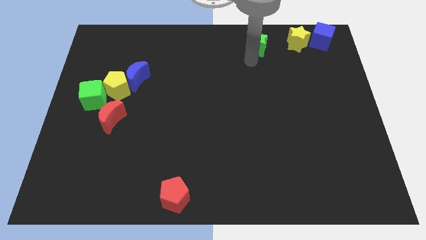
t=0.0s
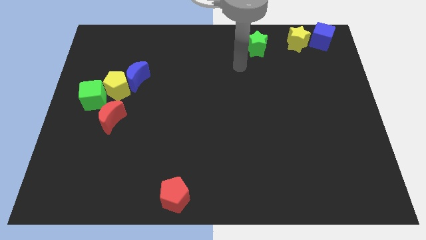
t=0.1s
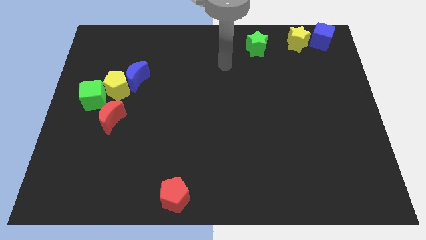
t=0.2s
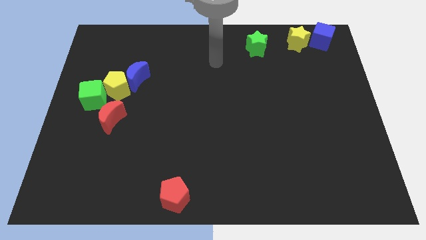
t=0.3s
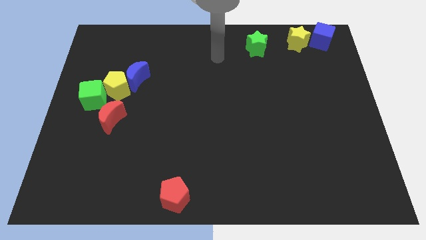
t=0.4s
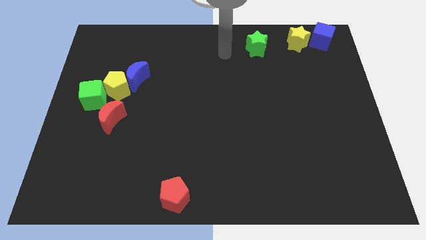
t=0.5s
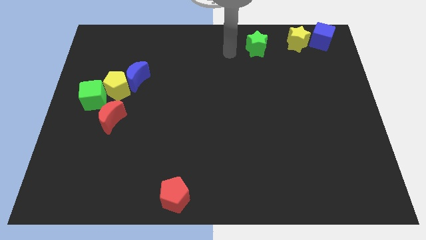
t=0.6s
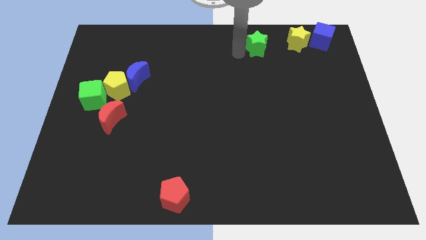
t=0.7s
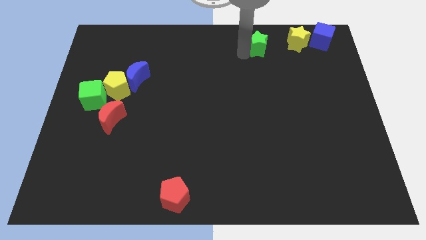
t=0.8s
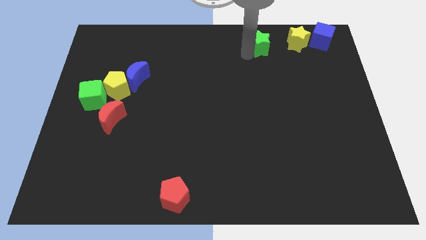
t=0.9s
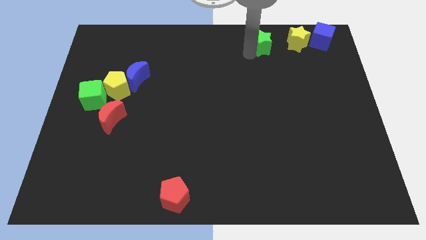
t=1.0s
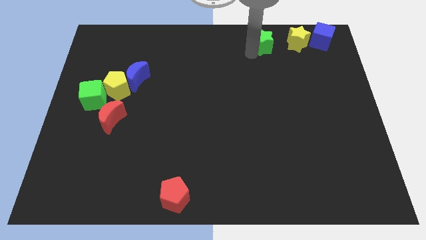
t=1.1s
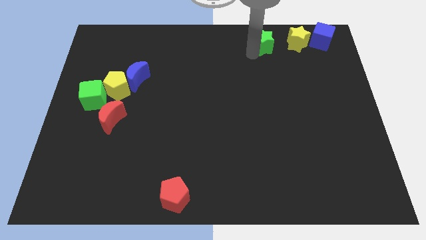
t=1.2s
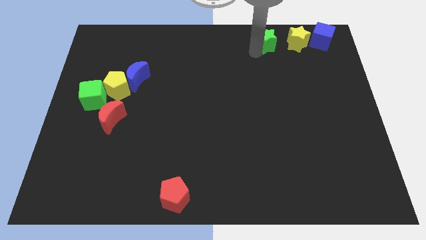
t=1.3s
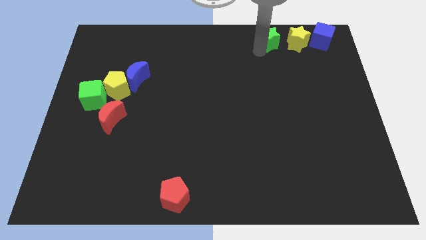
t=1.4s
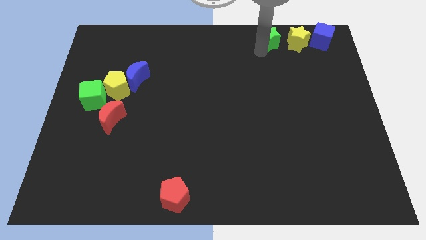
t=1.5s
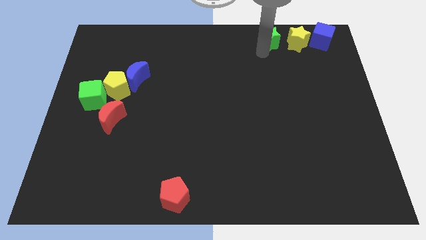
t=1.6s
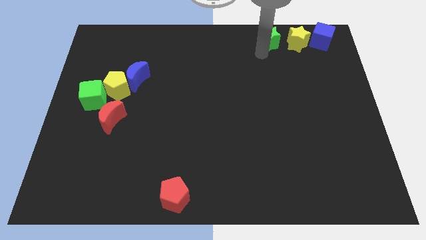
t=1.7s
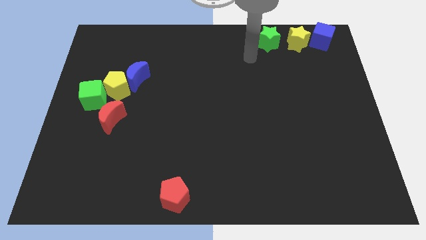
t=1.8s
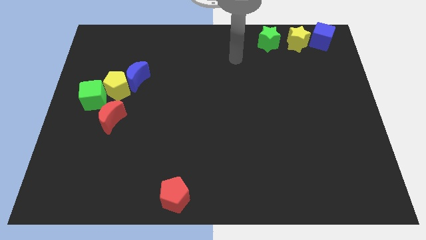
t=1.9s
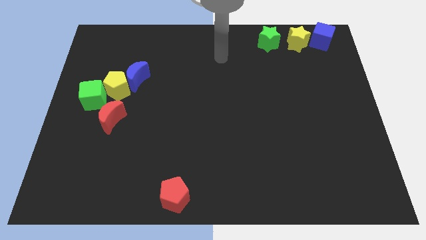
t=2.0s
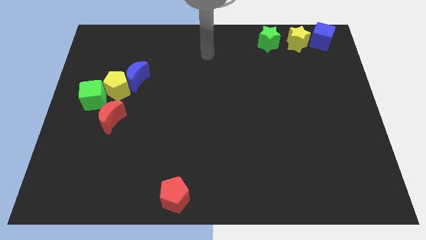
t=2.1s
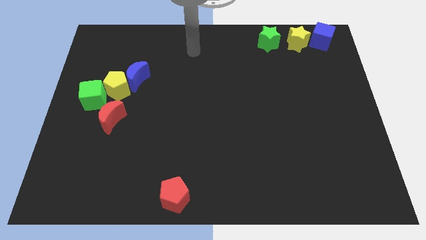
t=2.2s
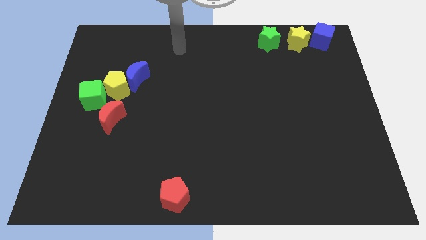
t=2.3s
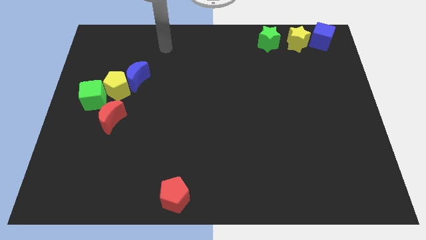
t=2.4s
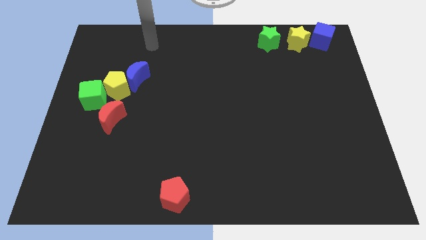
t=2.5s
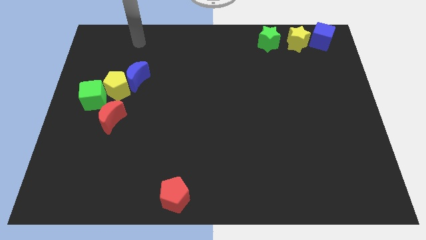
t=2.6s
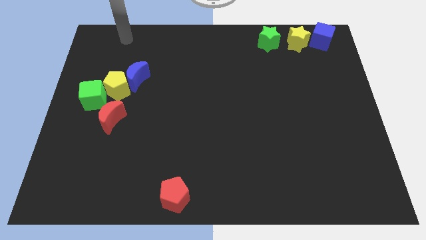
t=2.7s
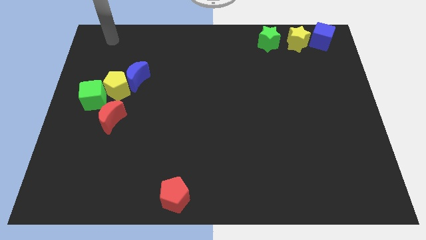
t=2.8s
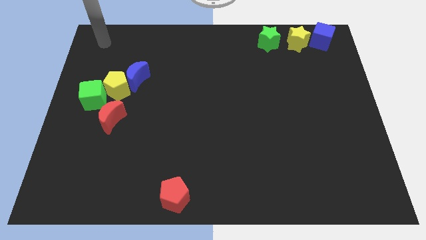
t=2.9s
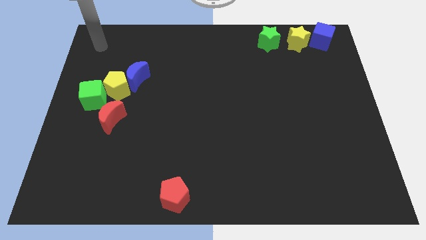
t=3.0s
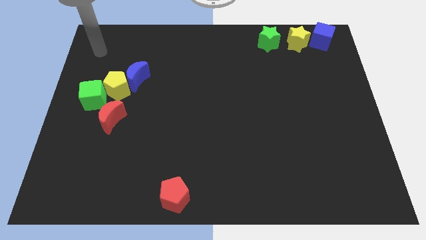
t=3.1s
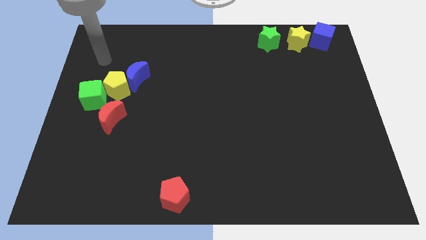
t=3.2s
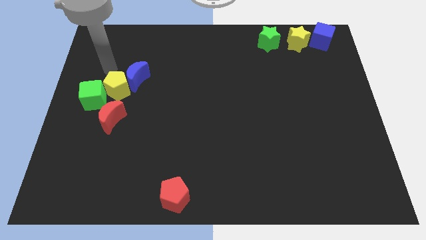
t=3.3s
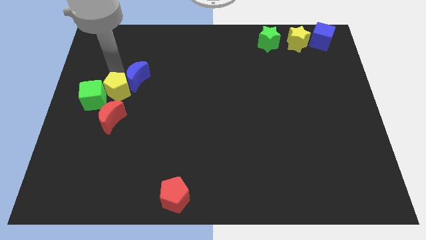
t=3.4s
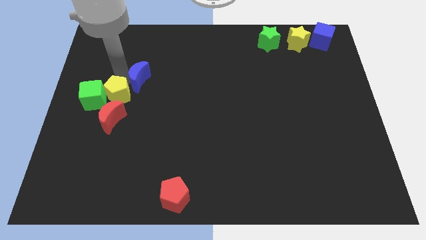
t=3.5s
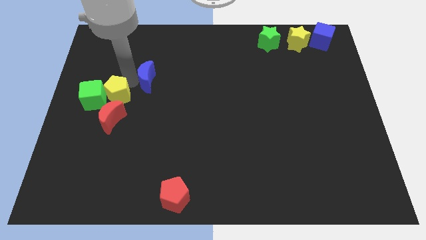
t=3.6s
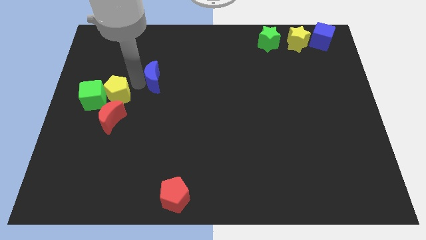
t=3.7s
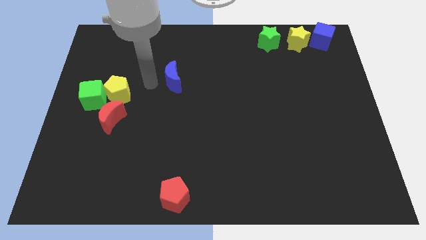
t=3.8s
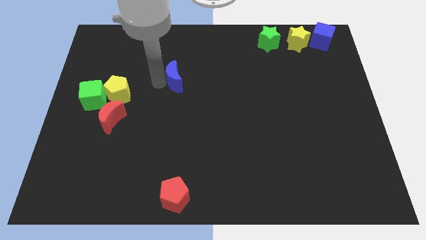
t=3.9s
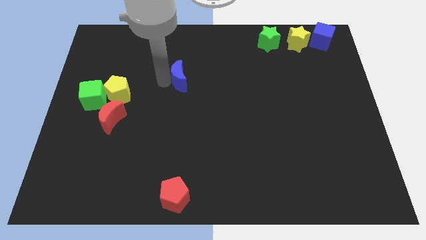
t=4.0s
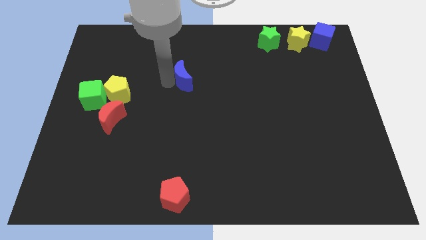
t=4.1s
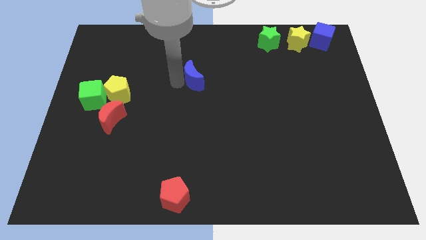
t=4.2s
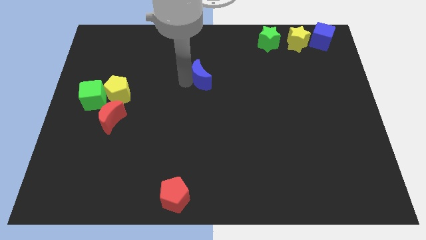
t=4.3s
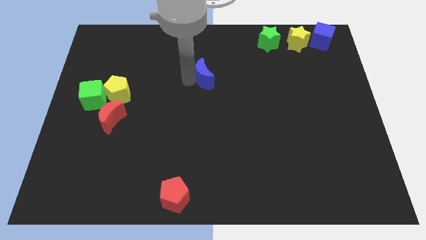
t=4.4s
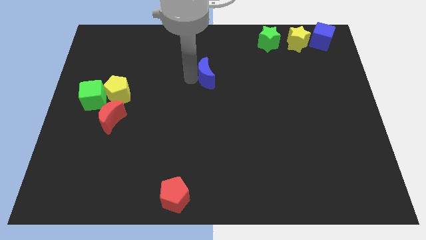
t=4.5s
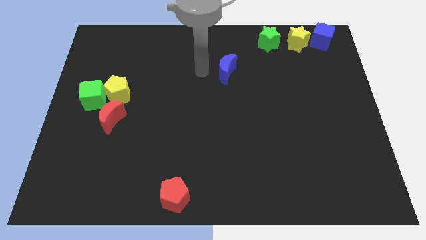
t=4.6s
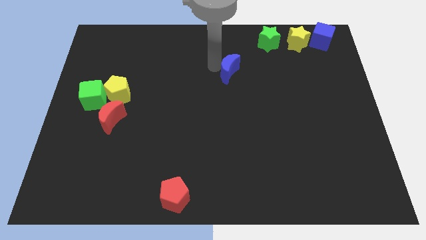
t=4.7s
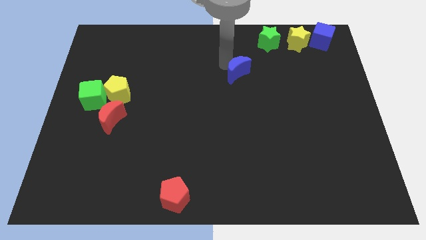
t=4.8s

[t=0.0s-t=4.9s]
push the green star to the left of the yellow star

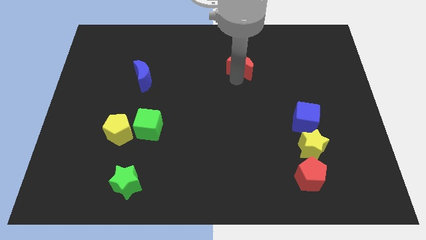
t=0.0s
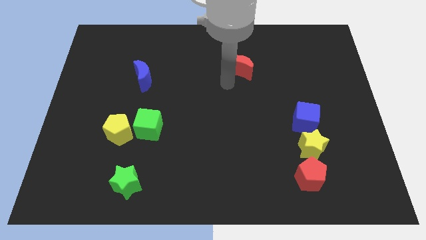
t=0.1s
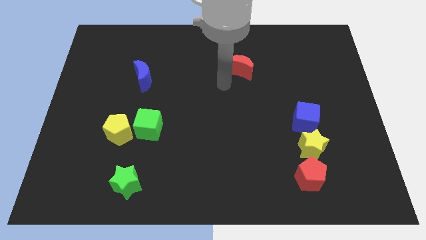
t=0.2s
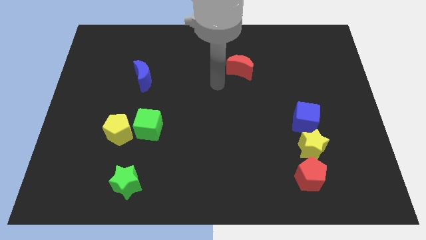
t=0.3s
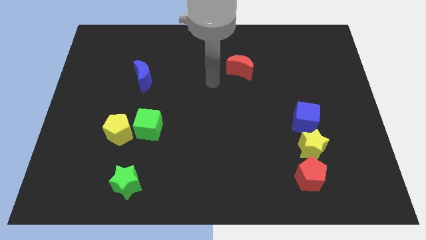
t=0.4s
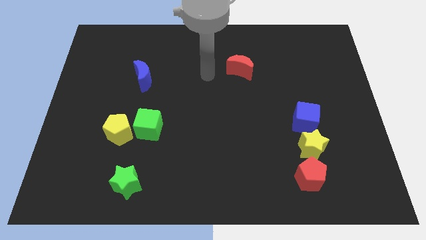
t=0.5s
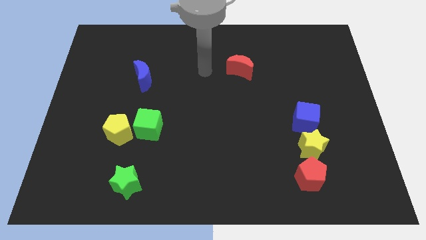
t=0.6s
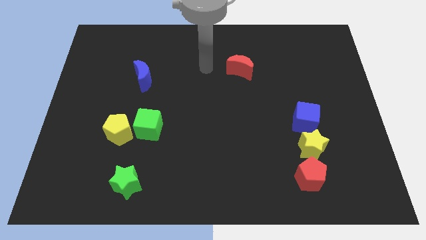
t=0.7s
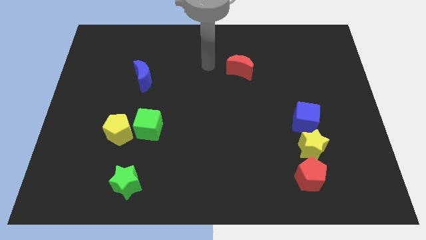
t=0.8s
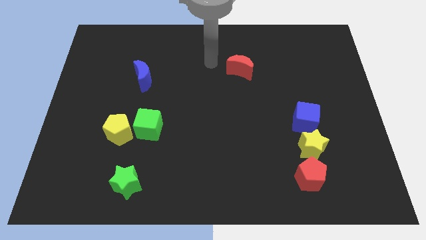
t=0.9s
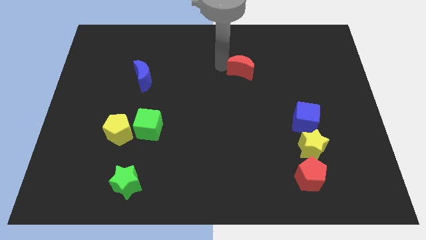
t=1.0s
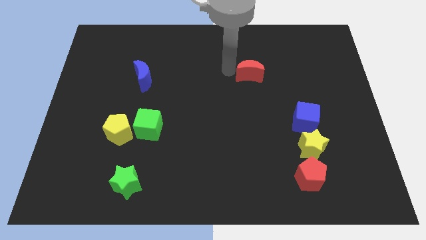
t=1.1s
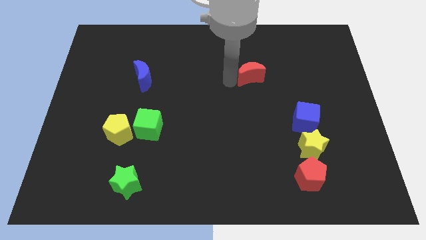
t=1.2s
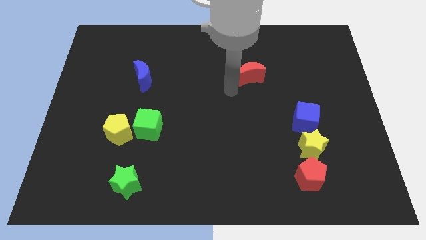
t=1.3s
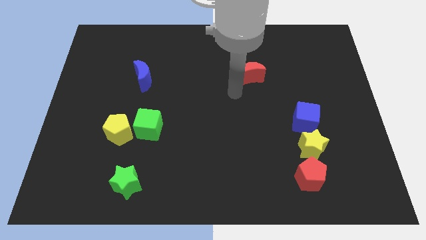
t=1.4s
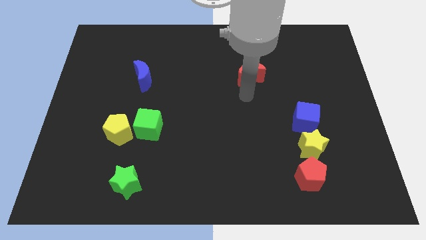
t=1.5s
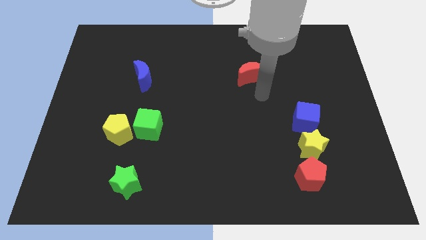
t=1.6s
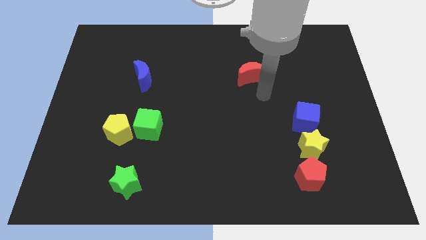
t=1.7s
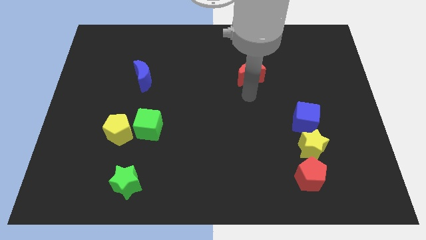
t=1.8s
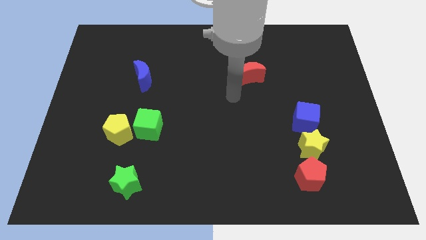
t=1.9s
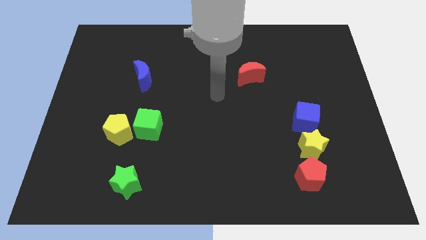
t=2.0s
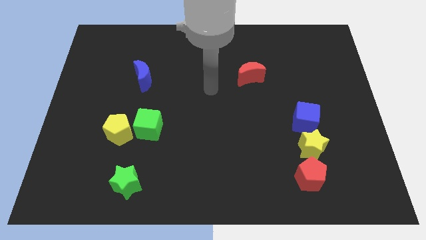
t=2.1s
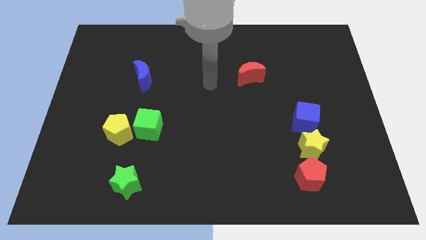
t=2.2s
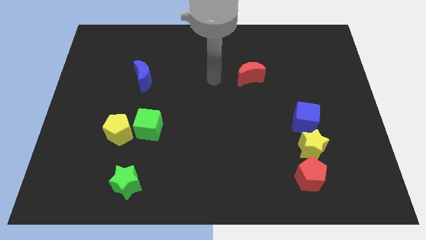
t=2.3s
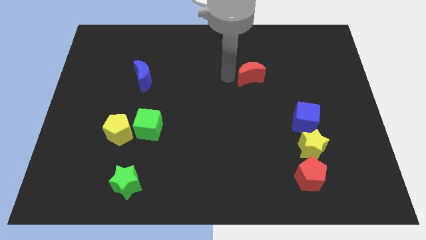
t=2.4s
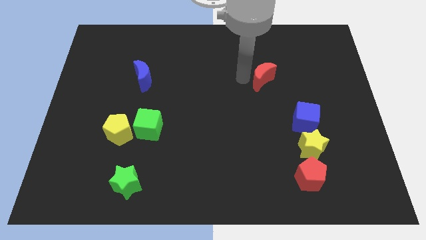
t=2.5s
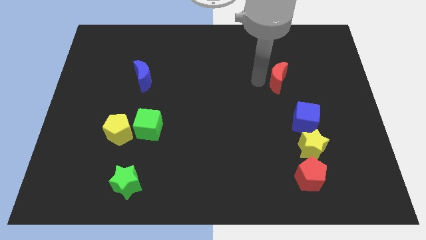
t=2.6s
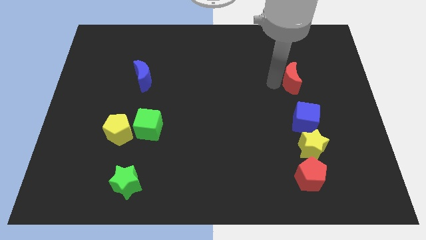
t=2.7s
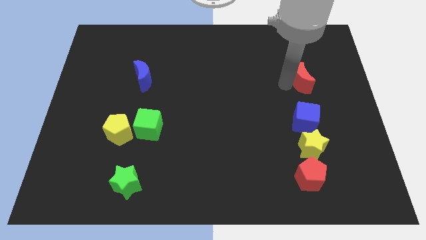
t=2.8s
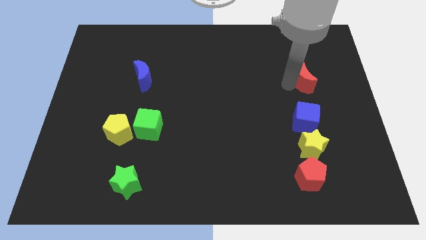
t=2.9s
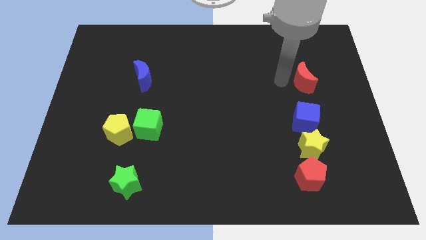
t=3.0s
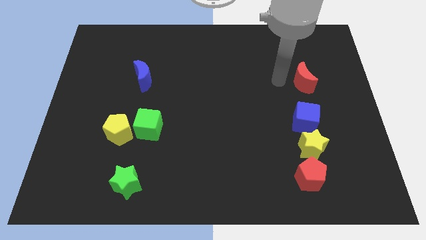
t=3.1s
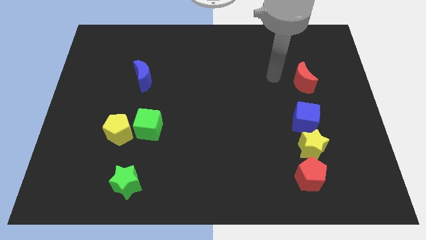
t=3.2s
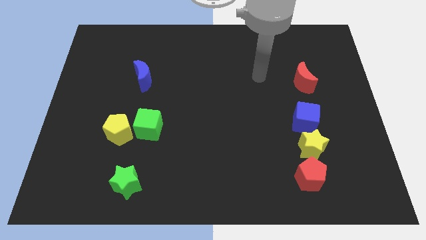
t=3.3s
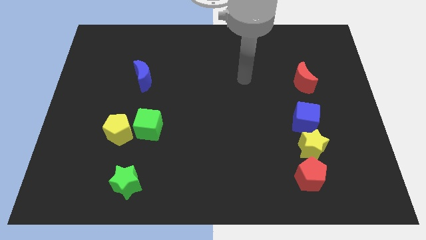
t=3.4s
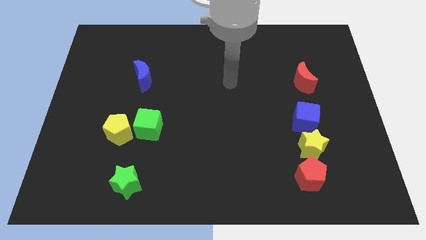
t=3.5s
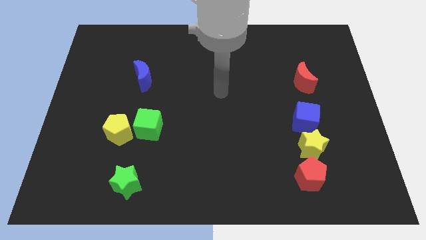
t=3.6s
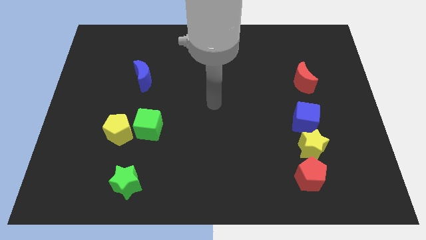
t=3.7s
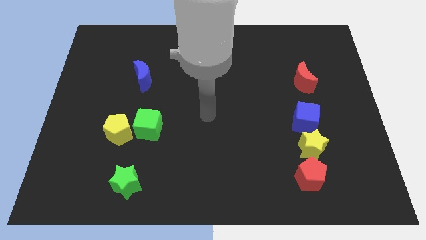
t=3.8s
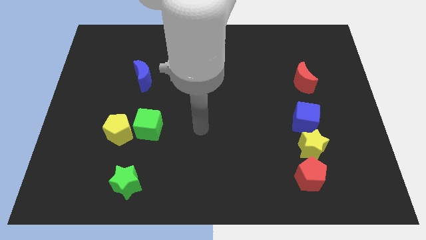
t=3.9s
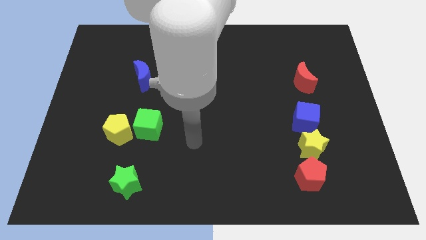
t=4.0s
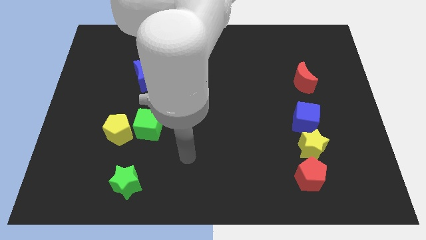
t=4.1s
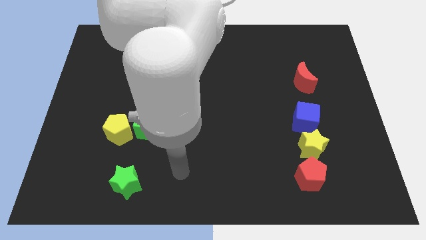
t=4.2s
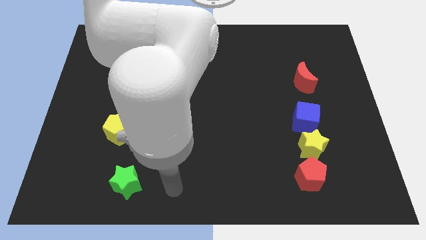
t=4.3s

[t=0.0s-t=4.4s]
move the red moon above the blue cube
